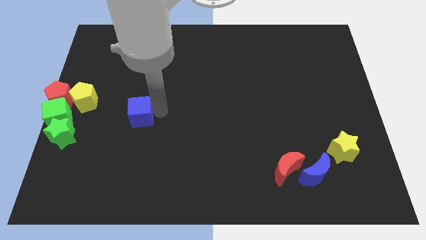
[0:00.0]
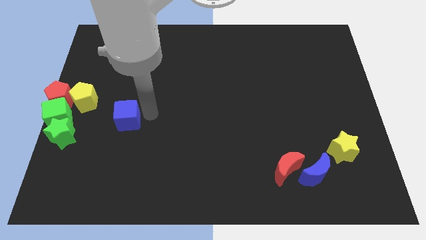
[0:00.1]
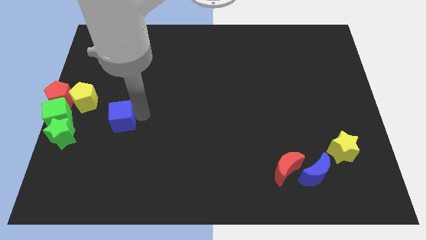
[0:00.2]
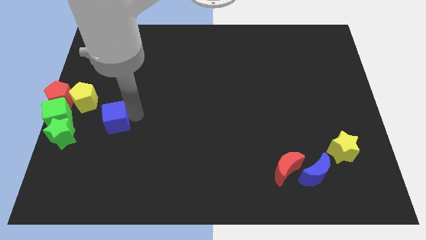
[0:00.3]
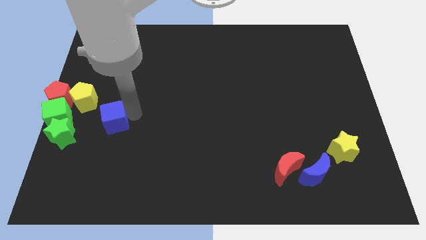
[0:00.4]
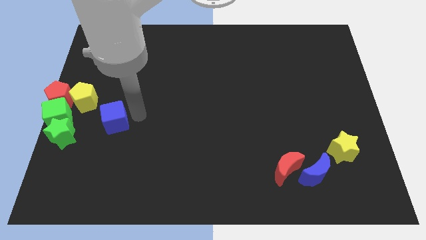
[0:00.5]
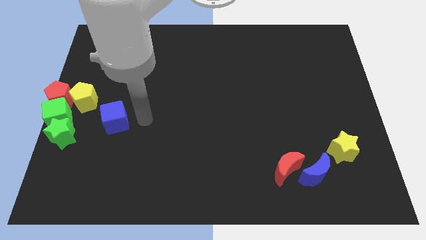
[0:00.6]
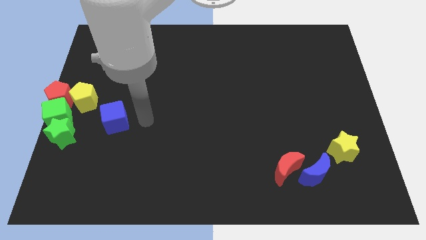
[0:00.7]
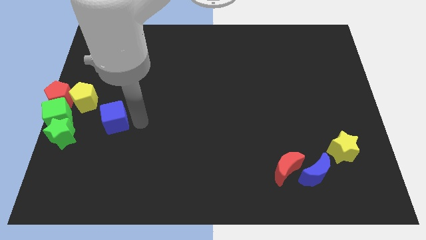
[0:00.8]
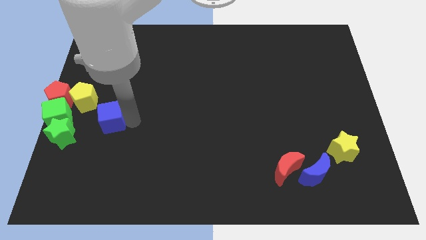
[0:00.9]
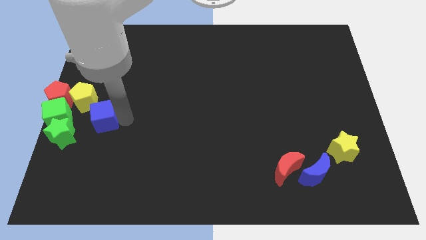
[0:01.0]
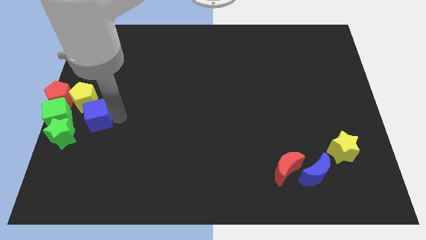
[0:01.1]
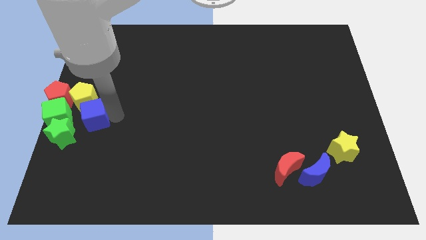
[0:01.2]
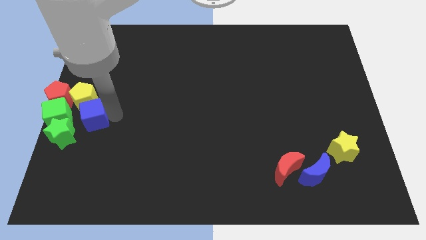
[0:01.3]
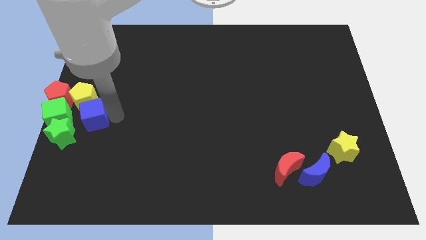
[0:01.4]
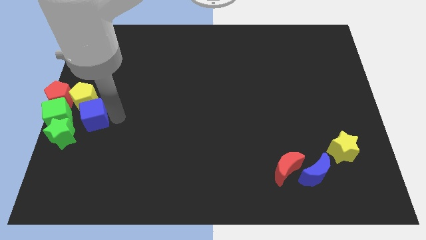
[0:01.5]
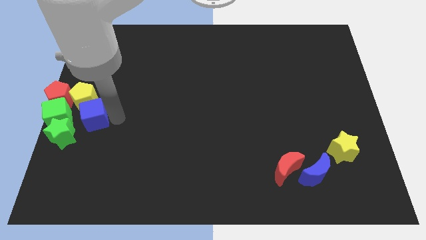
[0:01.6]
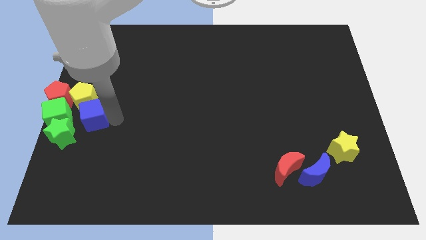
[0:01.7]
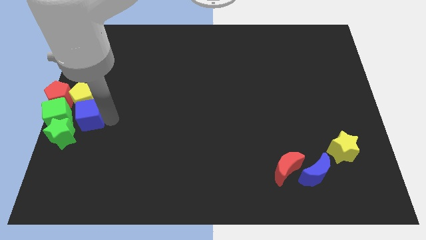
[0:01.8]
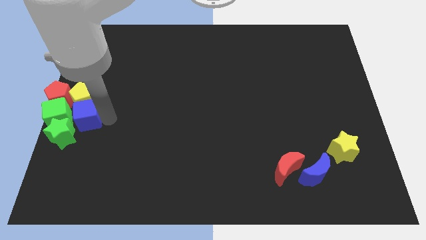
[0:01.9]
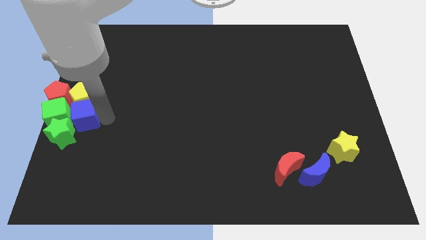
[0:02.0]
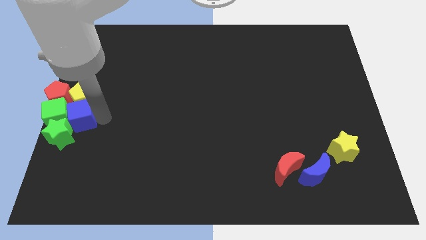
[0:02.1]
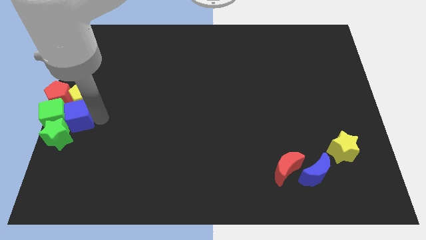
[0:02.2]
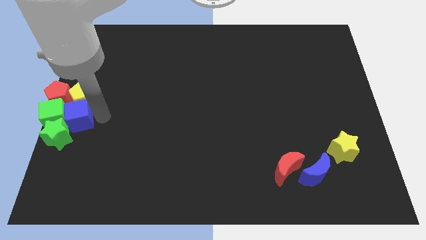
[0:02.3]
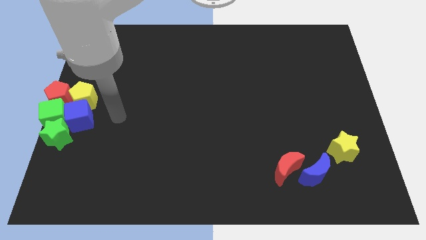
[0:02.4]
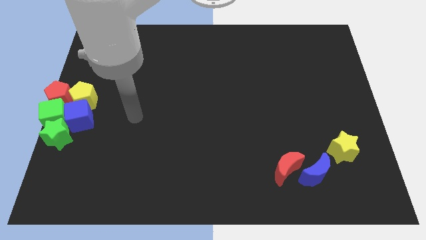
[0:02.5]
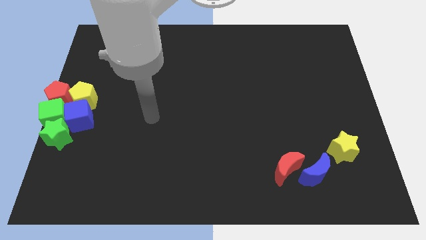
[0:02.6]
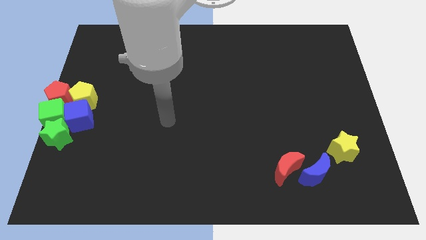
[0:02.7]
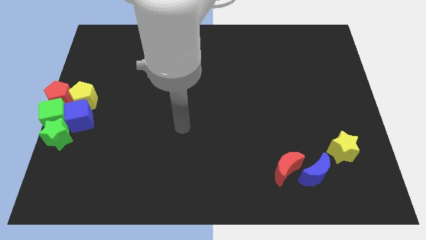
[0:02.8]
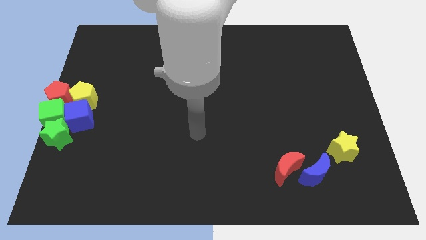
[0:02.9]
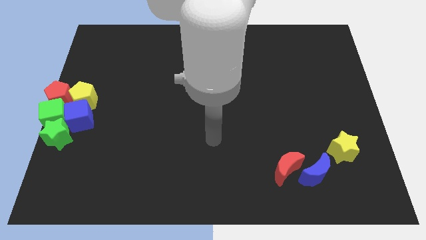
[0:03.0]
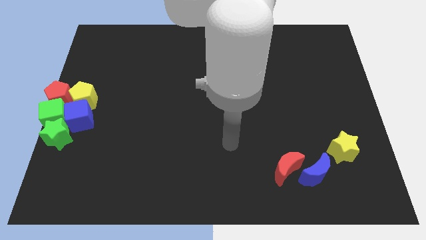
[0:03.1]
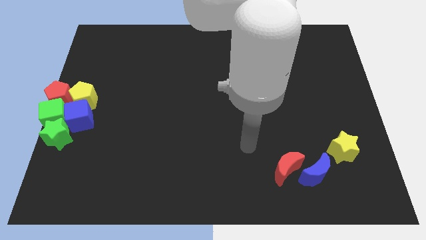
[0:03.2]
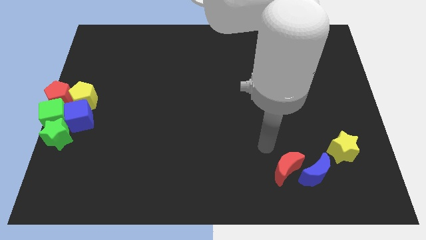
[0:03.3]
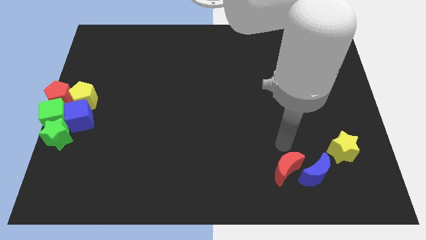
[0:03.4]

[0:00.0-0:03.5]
move blue cube into the green cube

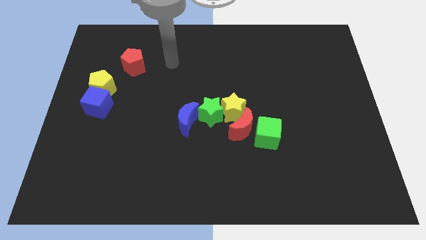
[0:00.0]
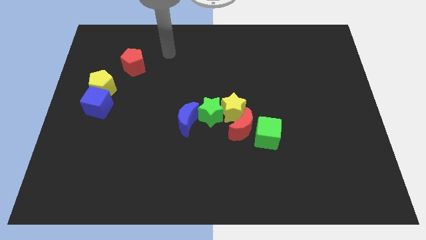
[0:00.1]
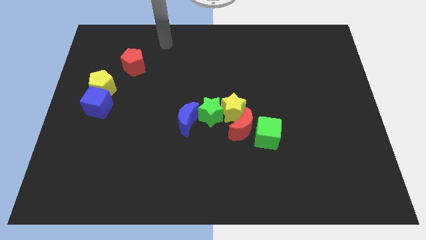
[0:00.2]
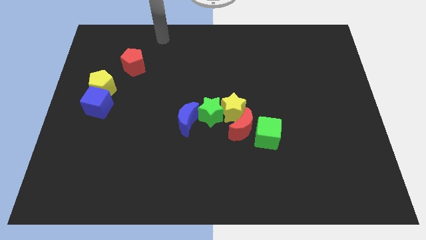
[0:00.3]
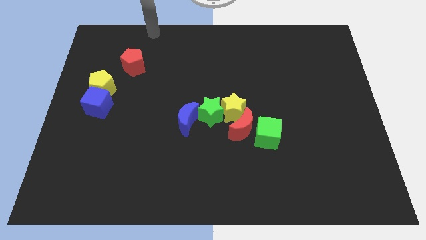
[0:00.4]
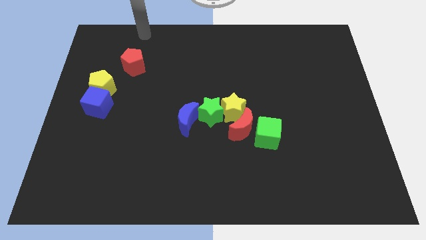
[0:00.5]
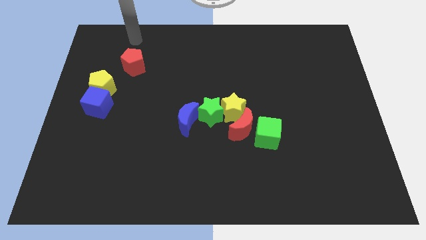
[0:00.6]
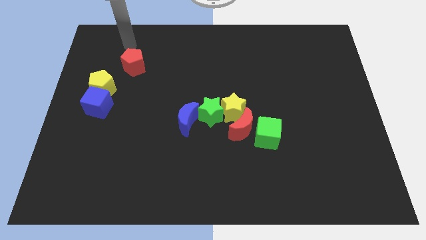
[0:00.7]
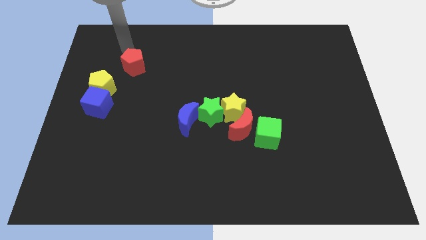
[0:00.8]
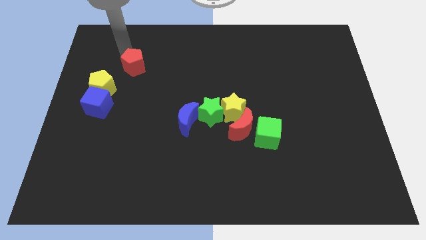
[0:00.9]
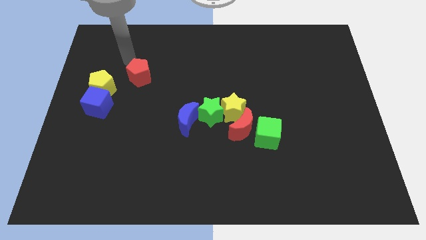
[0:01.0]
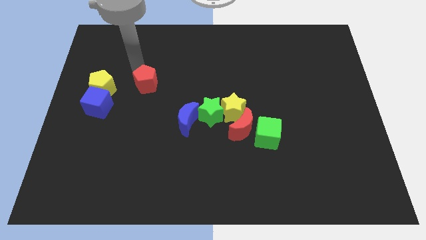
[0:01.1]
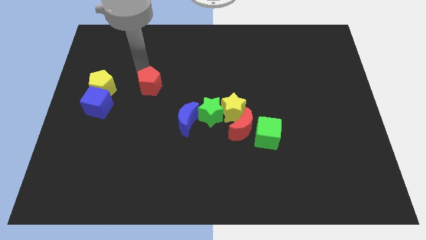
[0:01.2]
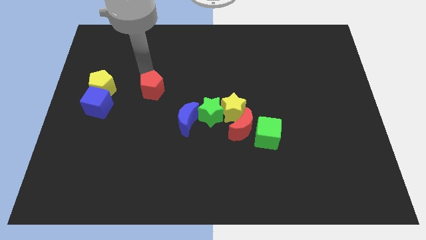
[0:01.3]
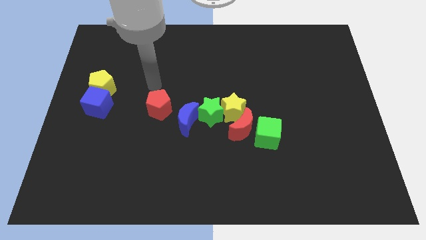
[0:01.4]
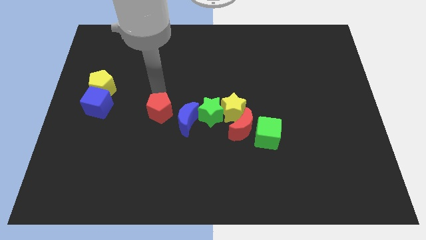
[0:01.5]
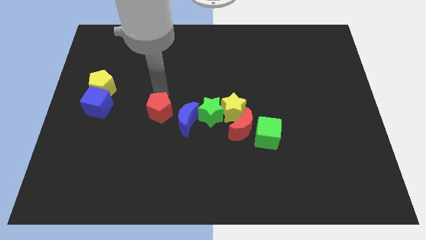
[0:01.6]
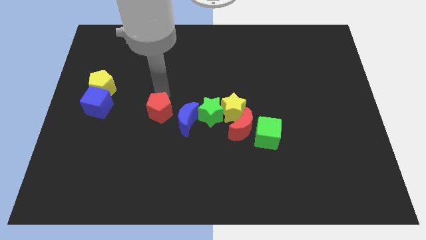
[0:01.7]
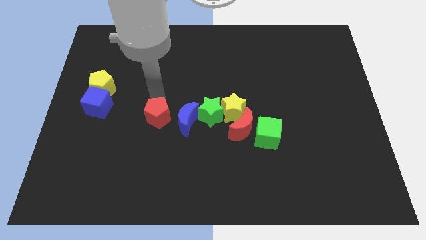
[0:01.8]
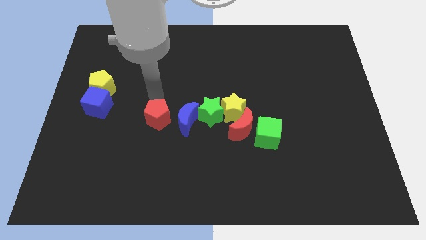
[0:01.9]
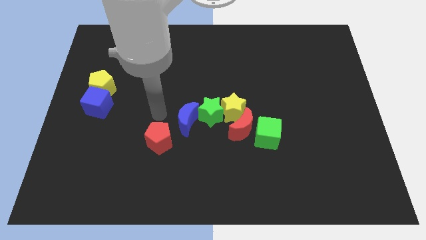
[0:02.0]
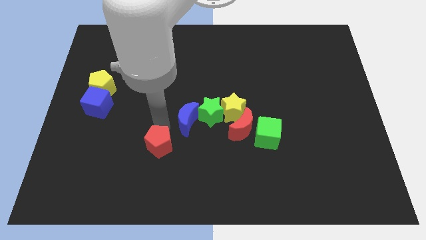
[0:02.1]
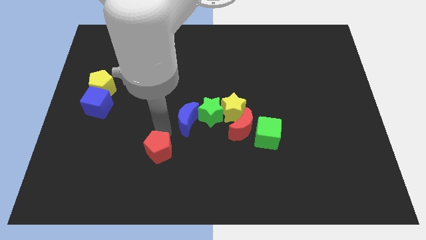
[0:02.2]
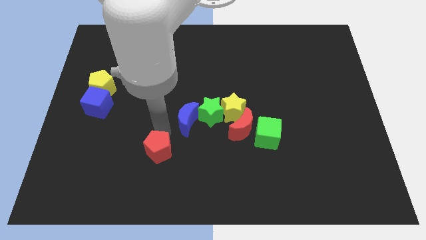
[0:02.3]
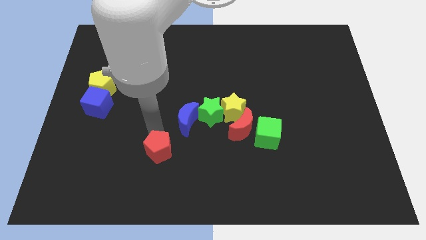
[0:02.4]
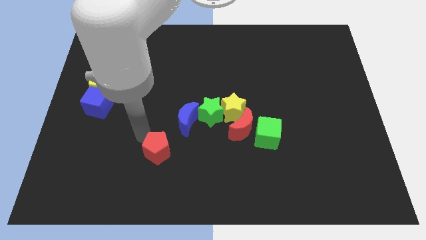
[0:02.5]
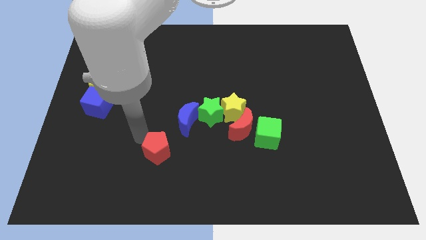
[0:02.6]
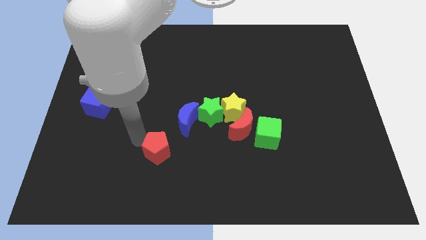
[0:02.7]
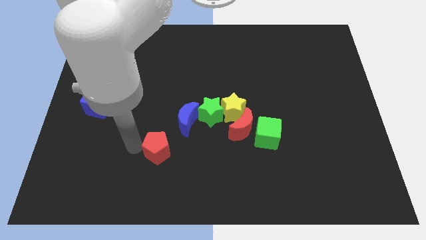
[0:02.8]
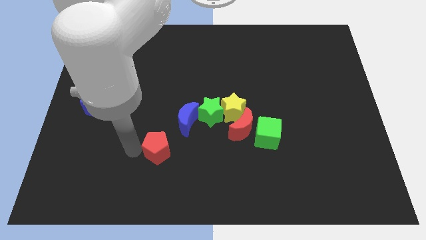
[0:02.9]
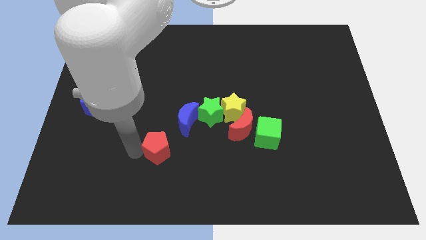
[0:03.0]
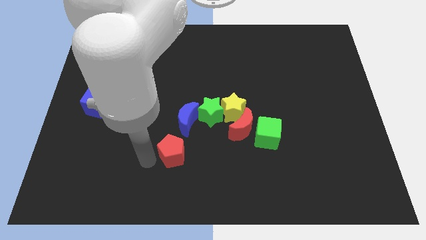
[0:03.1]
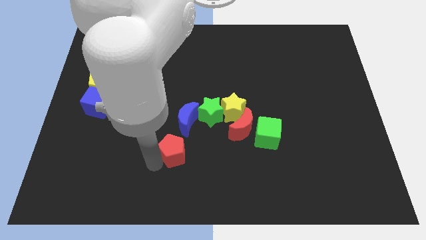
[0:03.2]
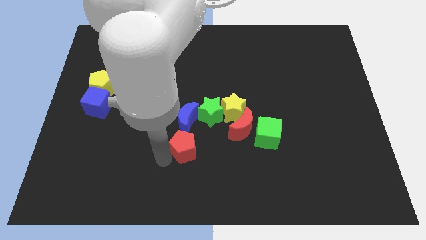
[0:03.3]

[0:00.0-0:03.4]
push the red pentagon below the blue crescent

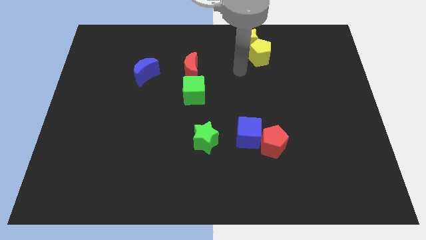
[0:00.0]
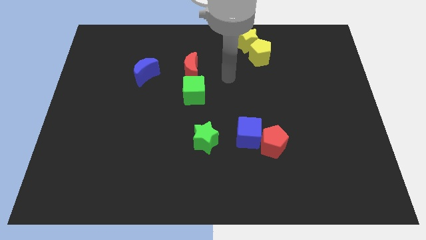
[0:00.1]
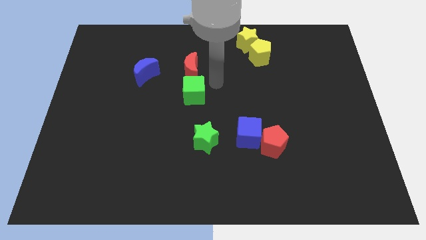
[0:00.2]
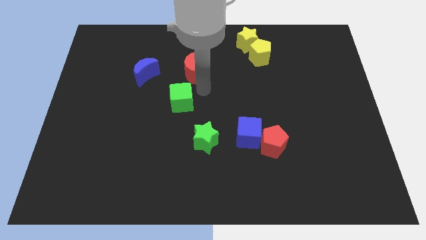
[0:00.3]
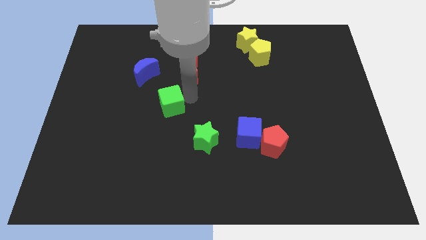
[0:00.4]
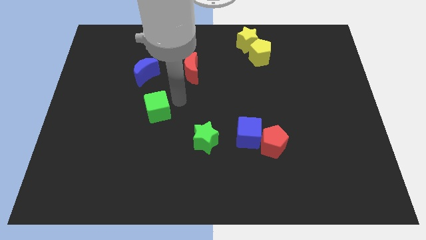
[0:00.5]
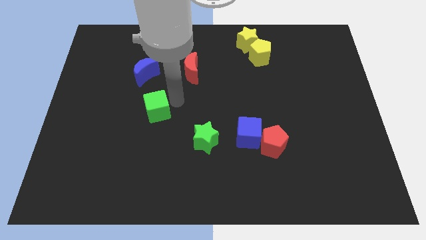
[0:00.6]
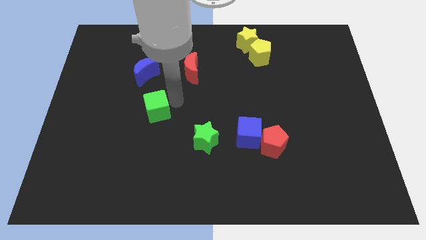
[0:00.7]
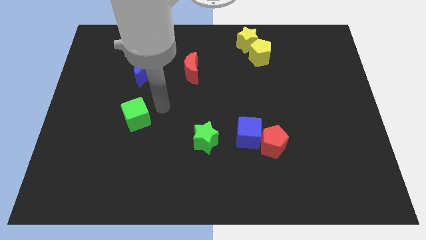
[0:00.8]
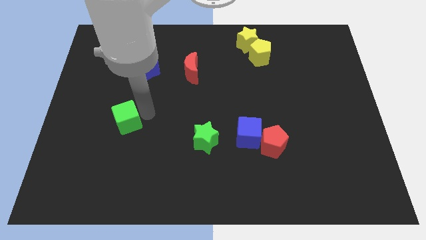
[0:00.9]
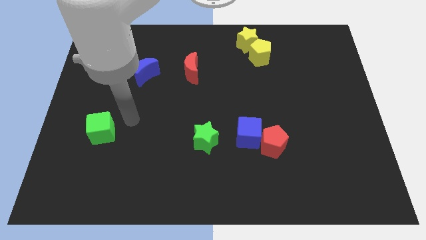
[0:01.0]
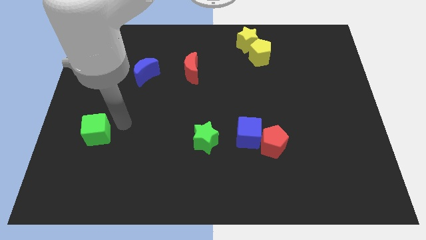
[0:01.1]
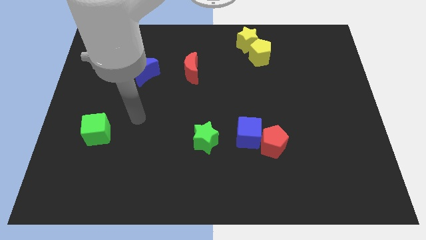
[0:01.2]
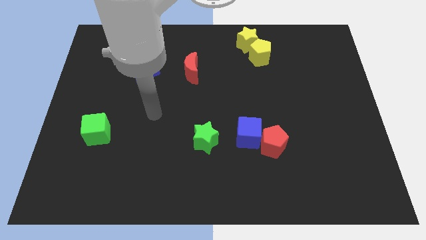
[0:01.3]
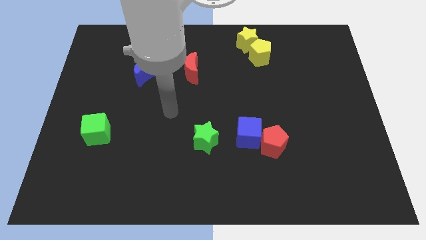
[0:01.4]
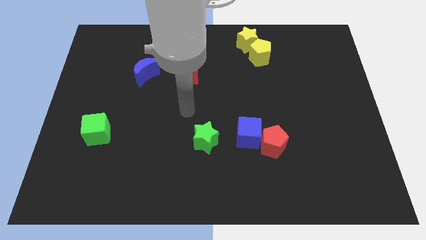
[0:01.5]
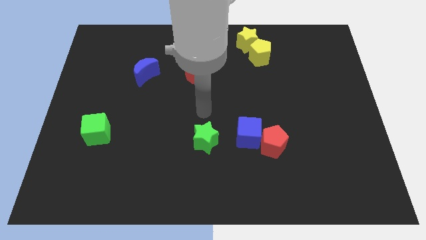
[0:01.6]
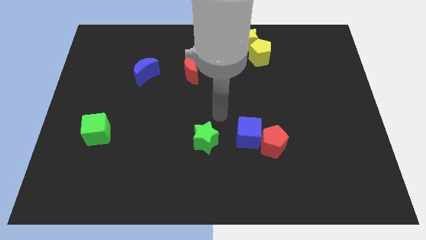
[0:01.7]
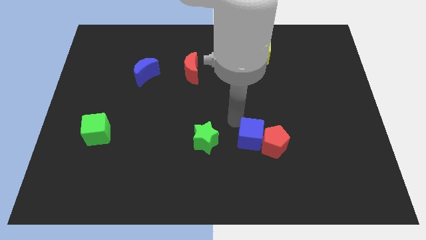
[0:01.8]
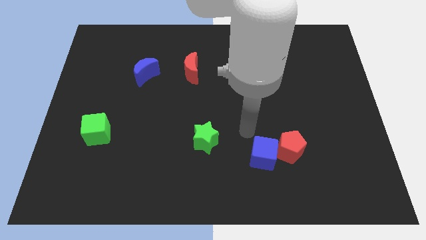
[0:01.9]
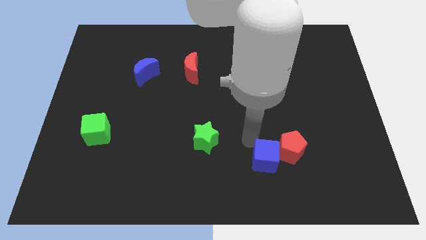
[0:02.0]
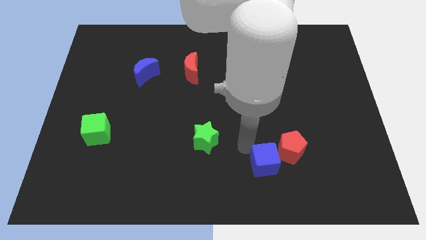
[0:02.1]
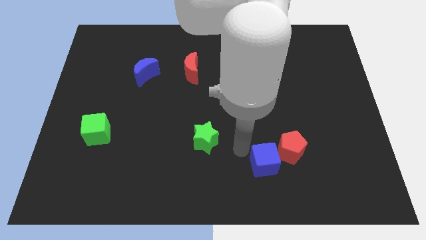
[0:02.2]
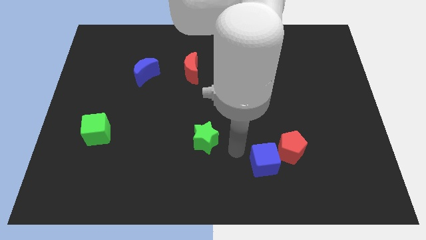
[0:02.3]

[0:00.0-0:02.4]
move the green cube to the left center of the board
